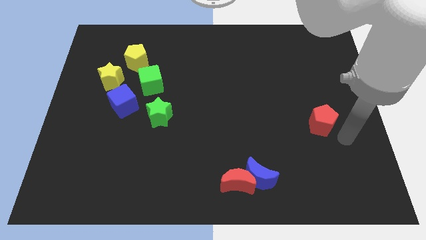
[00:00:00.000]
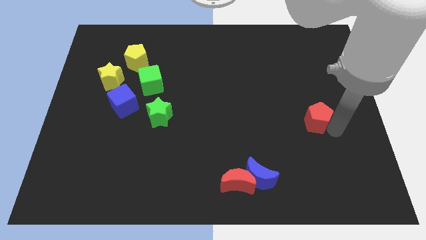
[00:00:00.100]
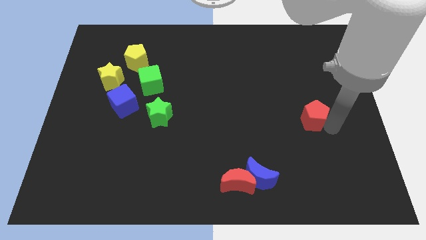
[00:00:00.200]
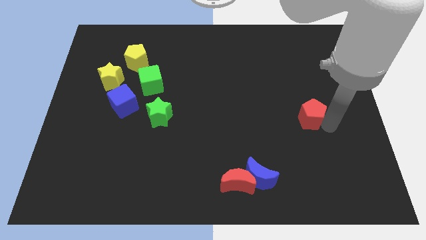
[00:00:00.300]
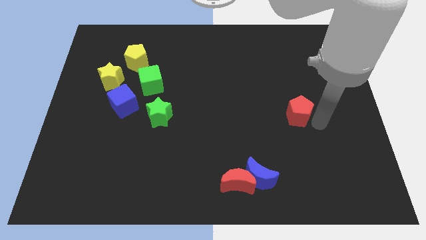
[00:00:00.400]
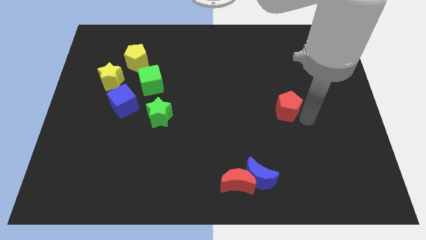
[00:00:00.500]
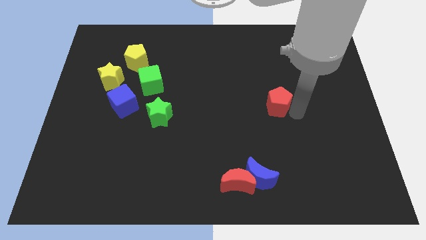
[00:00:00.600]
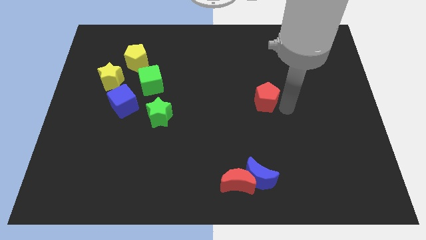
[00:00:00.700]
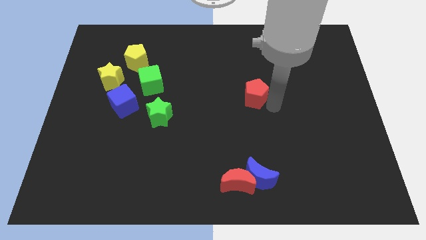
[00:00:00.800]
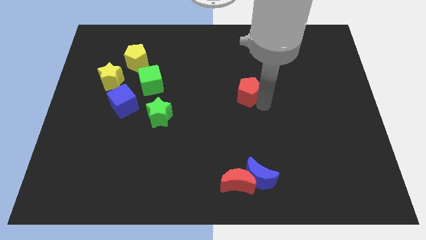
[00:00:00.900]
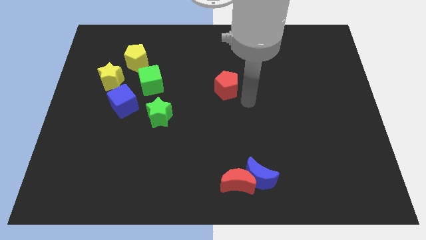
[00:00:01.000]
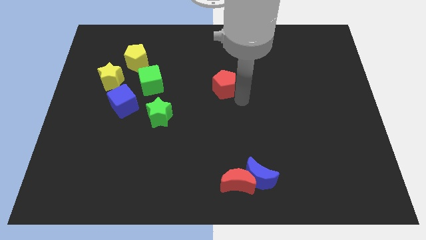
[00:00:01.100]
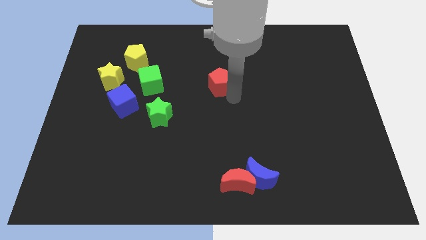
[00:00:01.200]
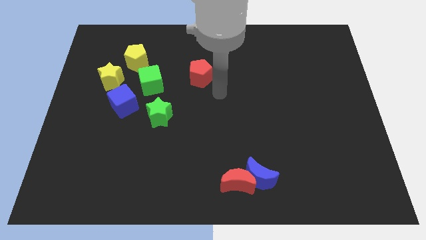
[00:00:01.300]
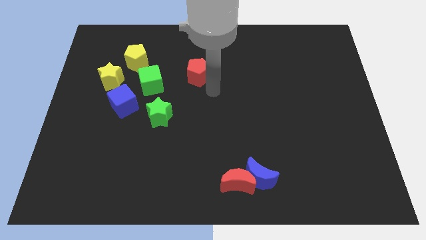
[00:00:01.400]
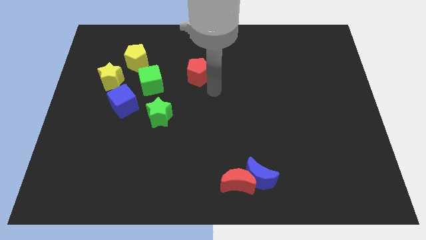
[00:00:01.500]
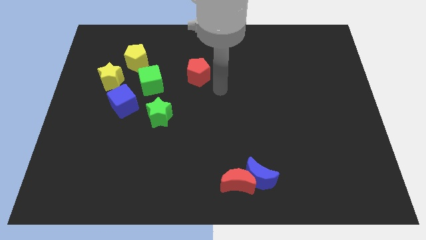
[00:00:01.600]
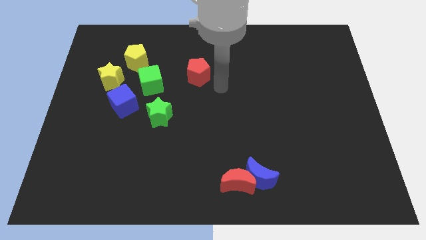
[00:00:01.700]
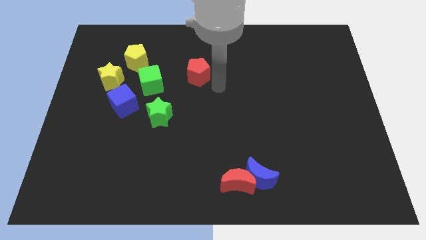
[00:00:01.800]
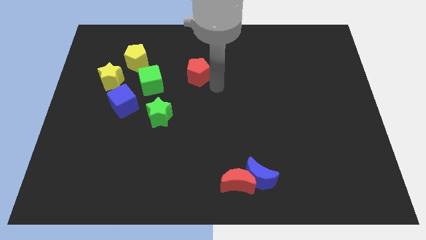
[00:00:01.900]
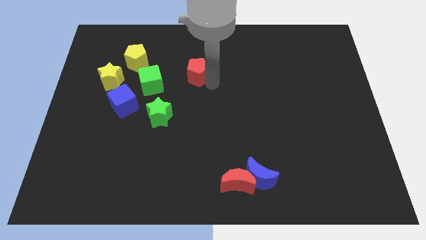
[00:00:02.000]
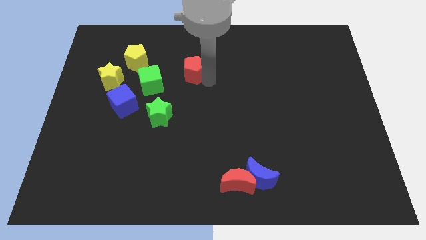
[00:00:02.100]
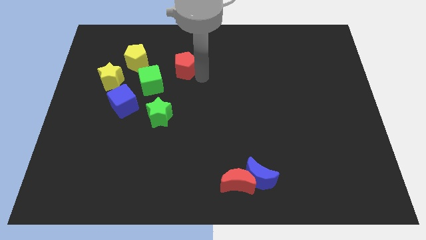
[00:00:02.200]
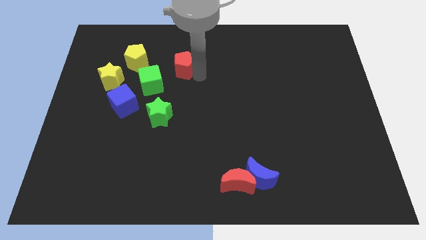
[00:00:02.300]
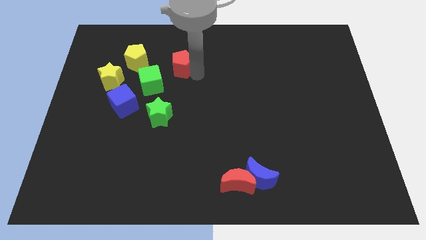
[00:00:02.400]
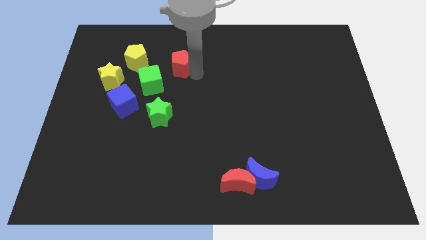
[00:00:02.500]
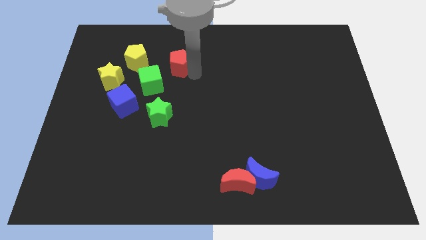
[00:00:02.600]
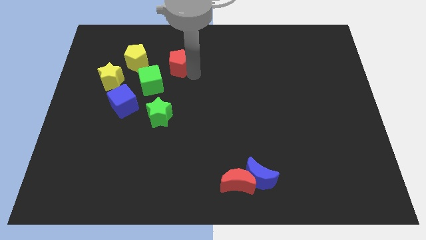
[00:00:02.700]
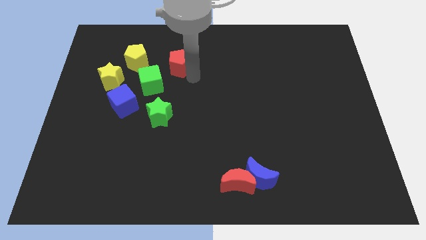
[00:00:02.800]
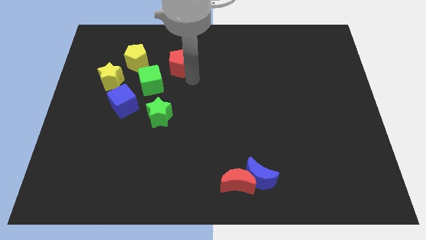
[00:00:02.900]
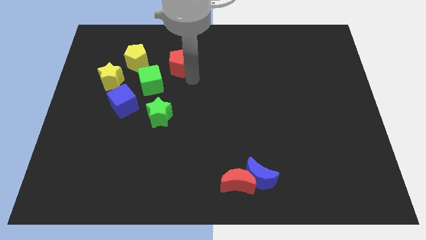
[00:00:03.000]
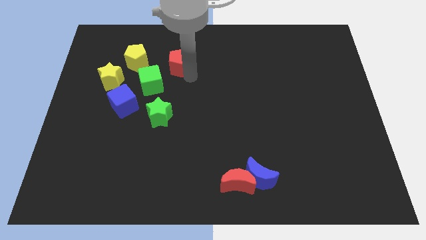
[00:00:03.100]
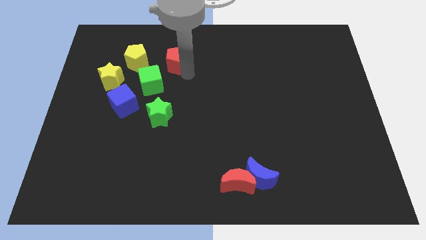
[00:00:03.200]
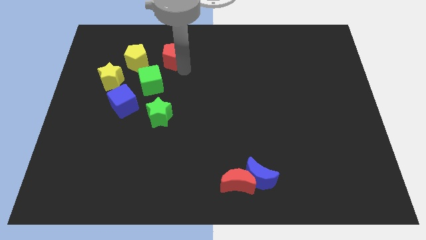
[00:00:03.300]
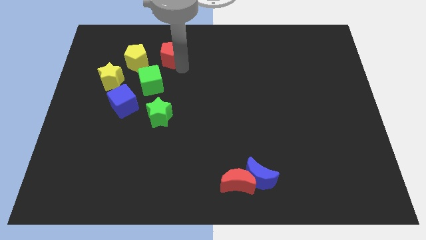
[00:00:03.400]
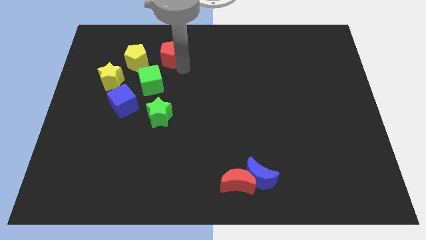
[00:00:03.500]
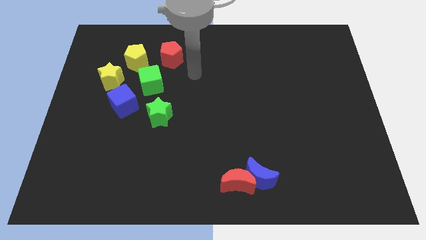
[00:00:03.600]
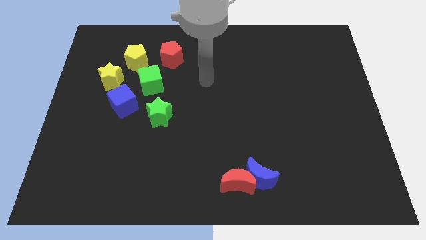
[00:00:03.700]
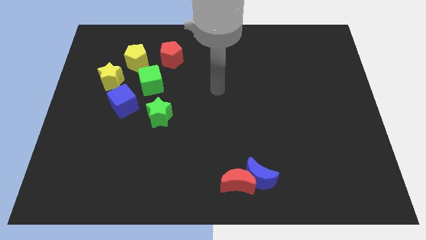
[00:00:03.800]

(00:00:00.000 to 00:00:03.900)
place red pentagon to the right of yellow pentagon

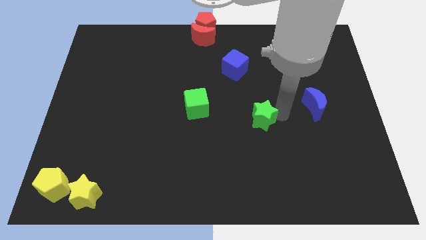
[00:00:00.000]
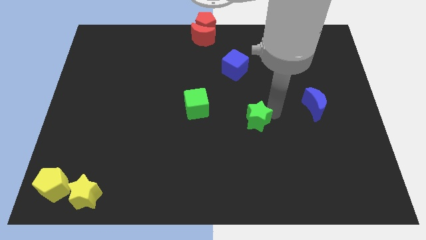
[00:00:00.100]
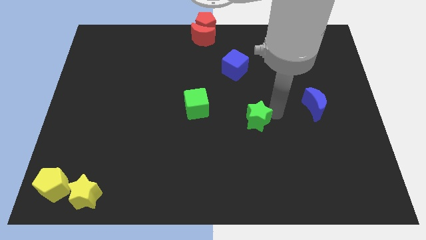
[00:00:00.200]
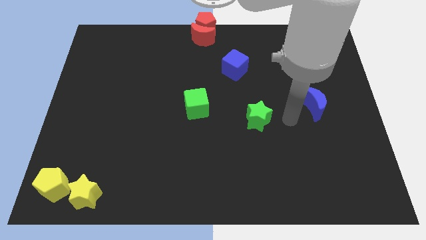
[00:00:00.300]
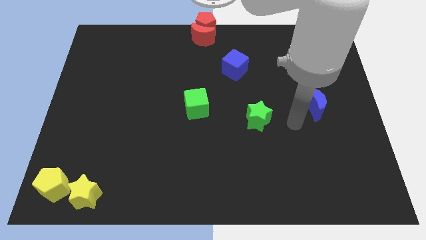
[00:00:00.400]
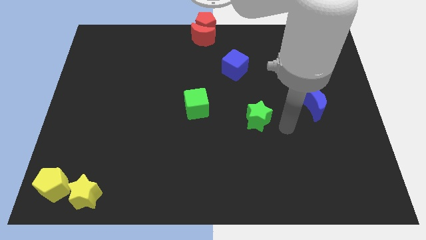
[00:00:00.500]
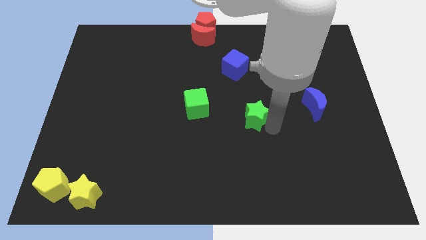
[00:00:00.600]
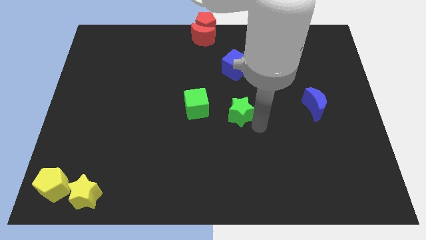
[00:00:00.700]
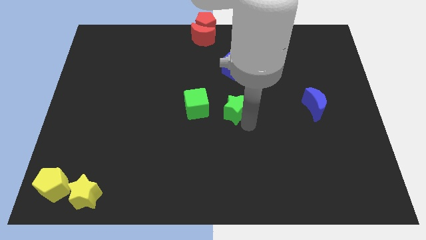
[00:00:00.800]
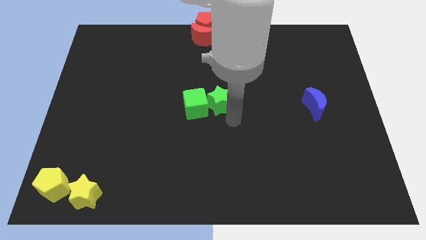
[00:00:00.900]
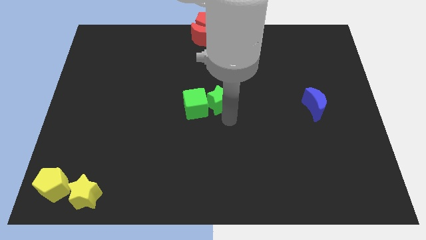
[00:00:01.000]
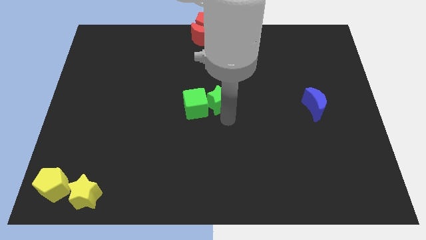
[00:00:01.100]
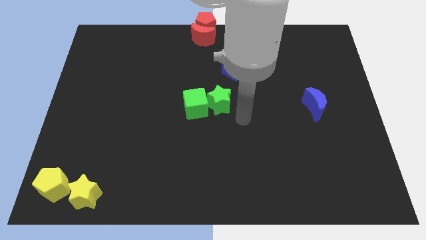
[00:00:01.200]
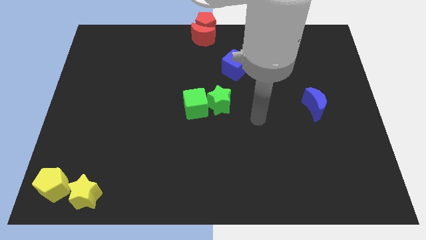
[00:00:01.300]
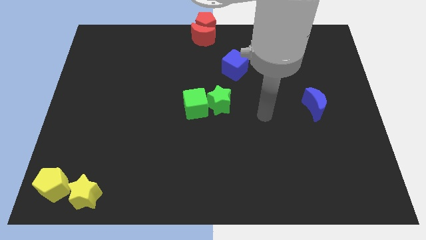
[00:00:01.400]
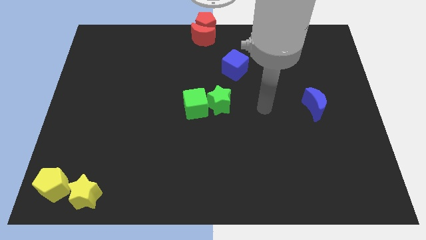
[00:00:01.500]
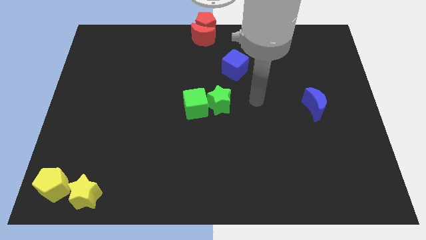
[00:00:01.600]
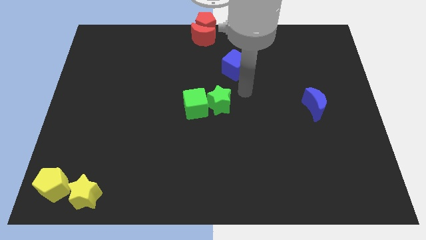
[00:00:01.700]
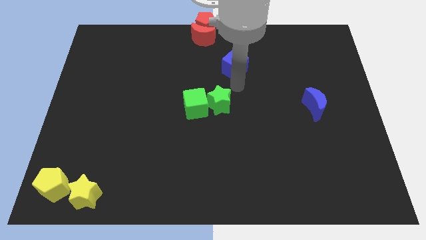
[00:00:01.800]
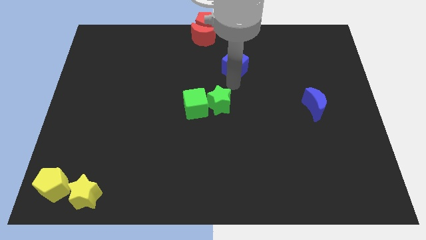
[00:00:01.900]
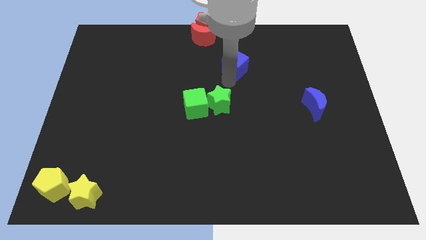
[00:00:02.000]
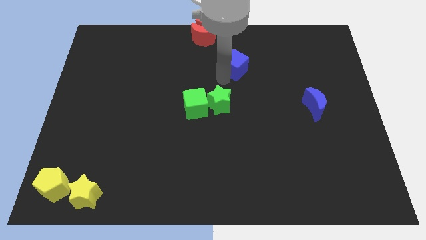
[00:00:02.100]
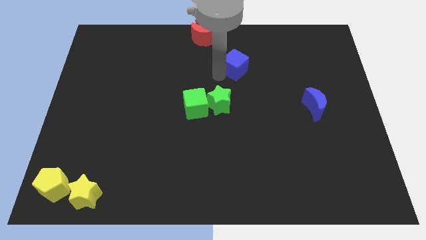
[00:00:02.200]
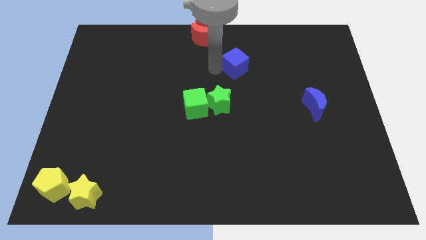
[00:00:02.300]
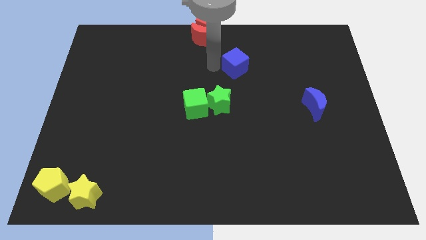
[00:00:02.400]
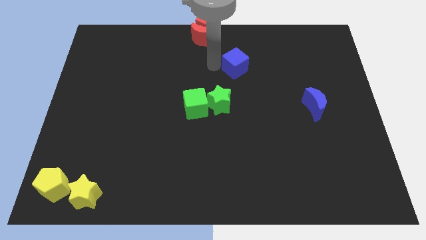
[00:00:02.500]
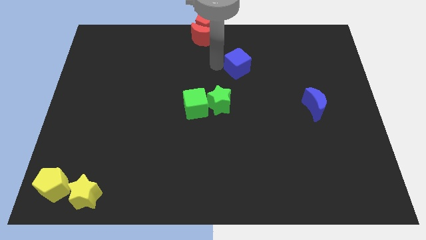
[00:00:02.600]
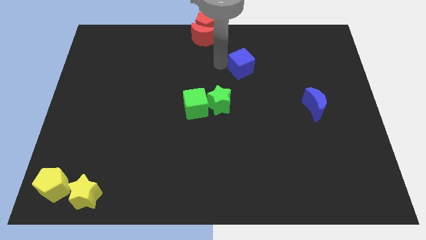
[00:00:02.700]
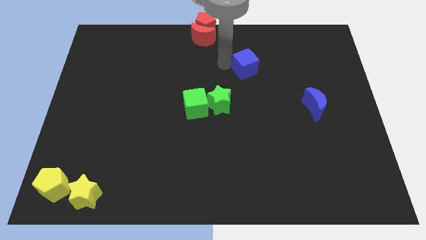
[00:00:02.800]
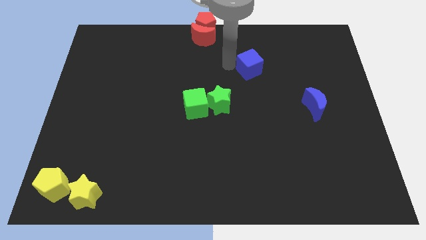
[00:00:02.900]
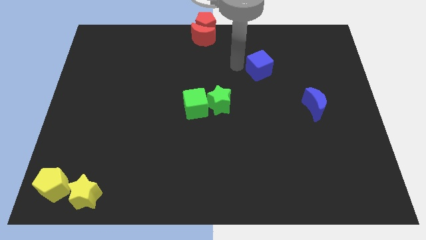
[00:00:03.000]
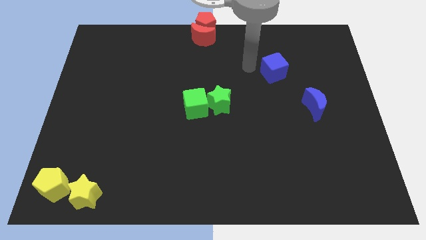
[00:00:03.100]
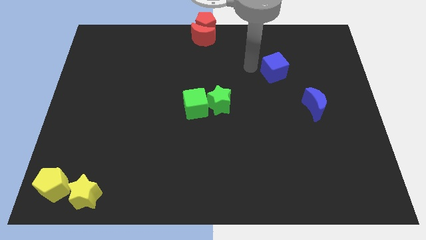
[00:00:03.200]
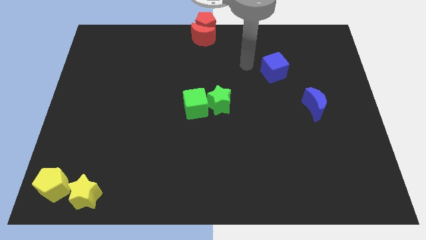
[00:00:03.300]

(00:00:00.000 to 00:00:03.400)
move the green star towards the right to the green cube

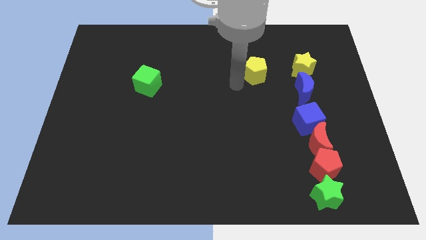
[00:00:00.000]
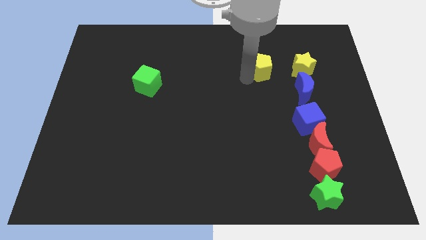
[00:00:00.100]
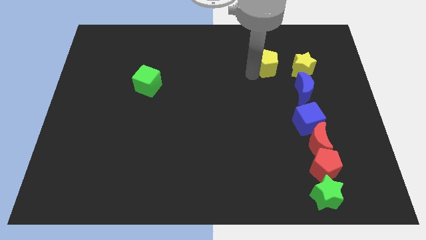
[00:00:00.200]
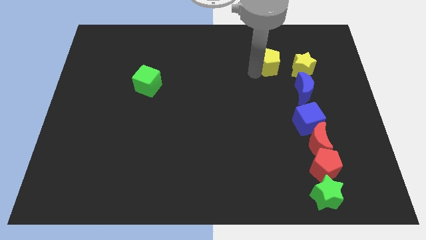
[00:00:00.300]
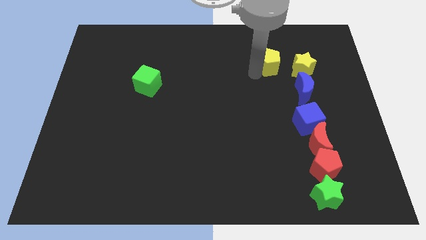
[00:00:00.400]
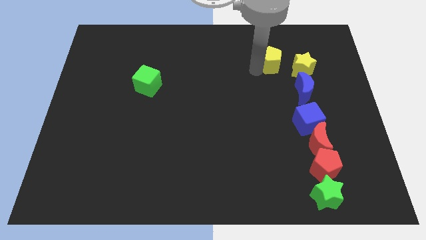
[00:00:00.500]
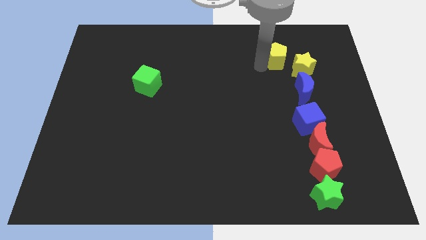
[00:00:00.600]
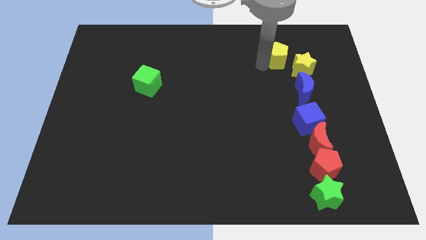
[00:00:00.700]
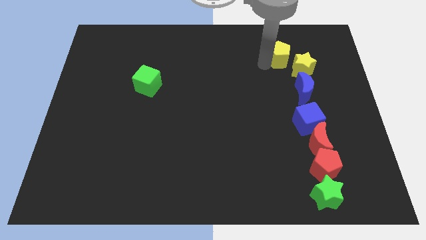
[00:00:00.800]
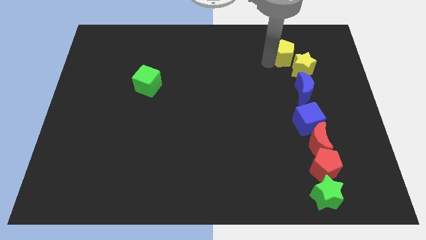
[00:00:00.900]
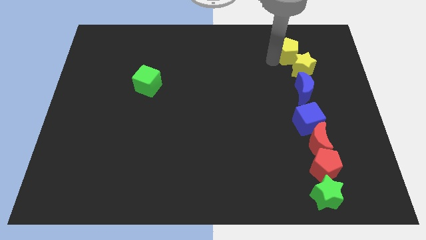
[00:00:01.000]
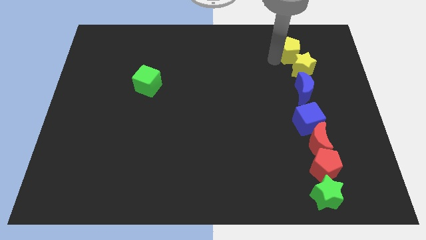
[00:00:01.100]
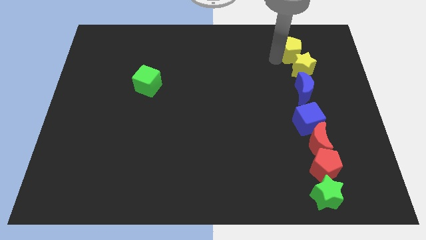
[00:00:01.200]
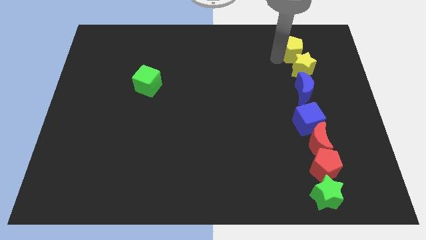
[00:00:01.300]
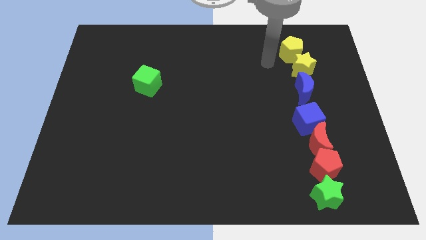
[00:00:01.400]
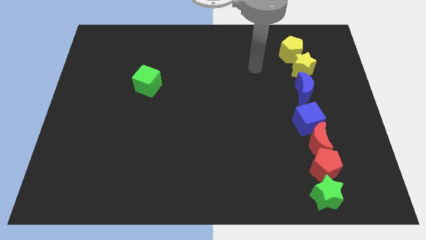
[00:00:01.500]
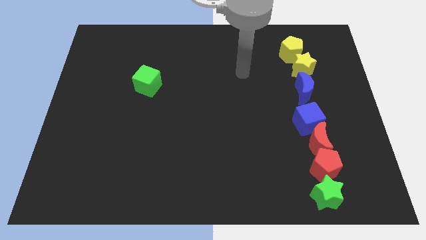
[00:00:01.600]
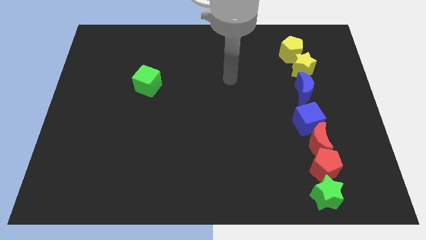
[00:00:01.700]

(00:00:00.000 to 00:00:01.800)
move the yellow pentagon to the right side of the board
